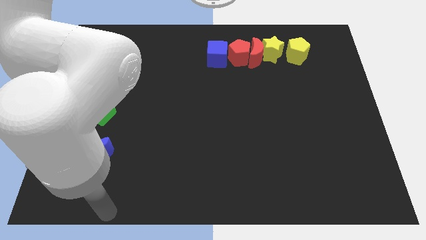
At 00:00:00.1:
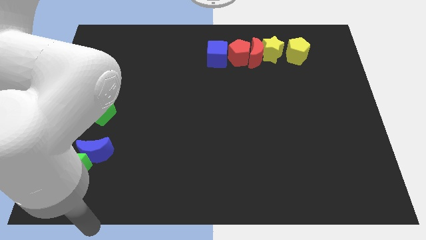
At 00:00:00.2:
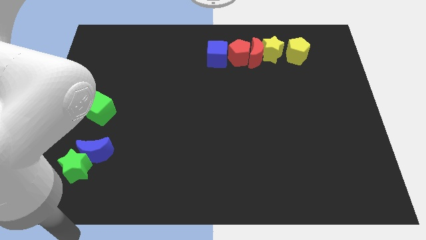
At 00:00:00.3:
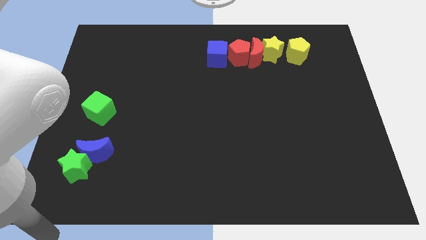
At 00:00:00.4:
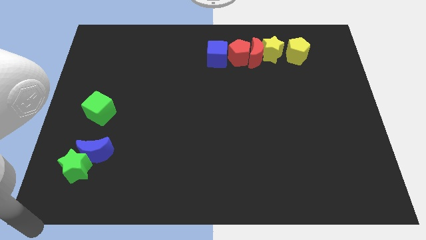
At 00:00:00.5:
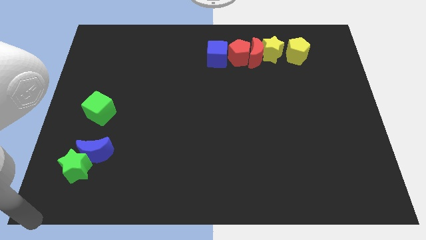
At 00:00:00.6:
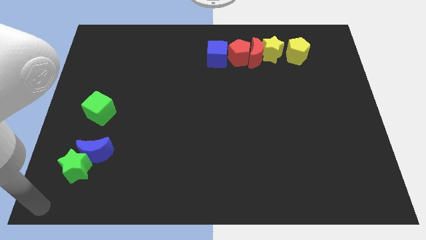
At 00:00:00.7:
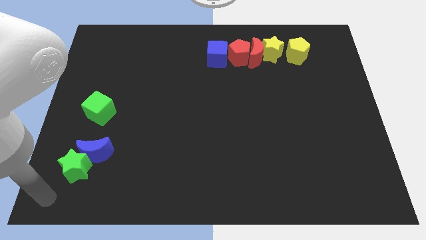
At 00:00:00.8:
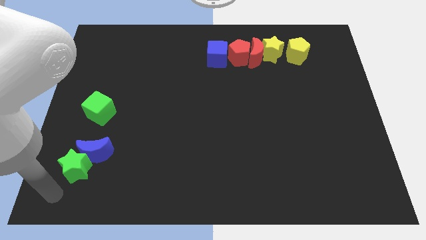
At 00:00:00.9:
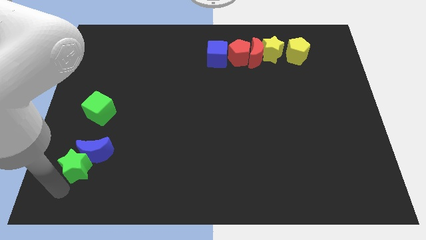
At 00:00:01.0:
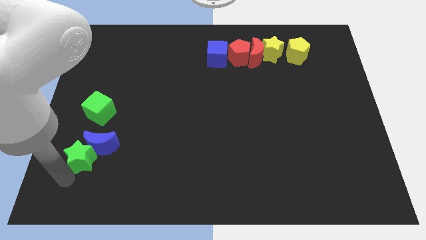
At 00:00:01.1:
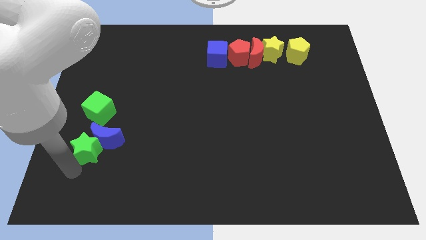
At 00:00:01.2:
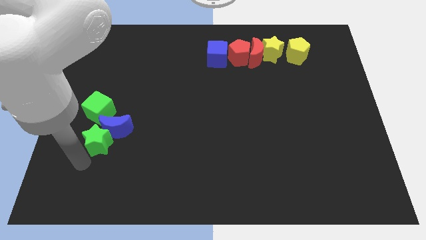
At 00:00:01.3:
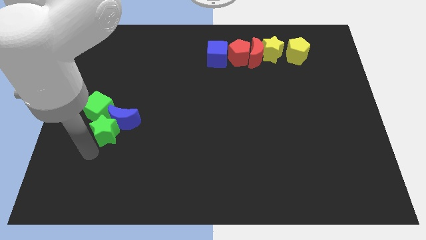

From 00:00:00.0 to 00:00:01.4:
push the green star and blue moon close to the green cube

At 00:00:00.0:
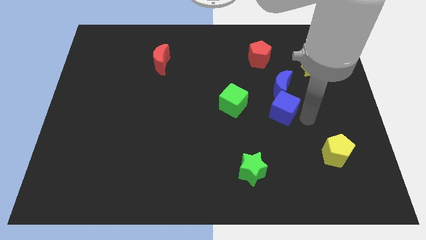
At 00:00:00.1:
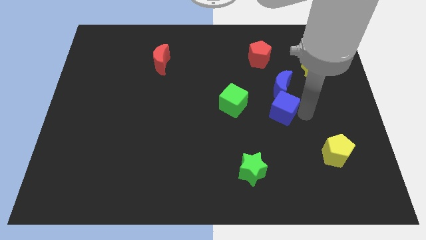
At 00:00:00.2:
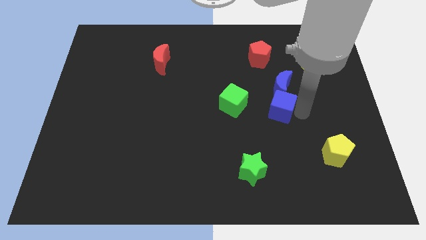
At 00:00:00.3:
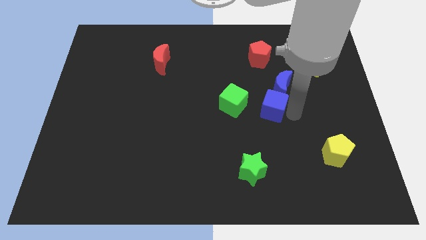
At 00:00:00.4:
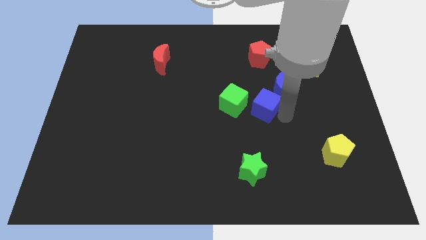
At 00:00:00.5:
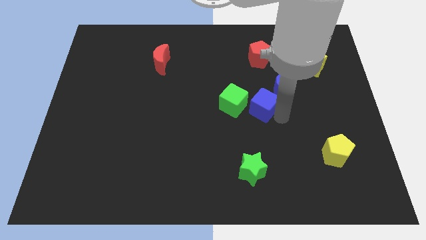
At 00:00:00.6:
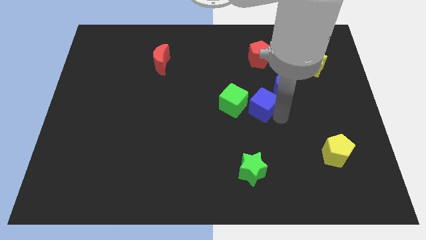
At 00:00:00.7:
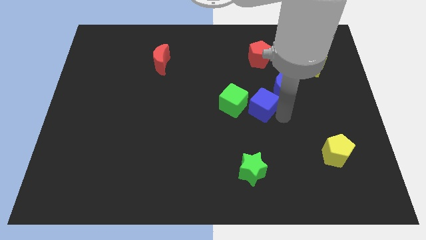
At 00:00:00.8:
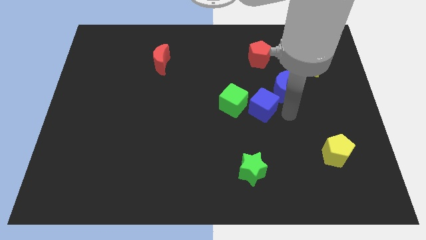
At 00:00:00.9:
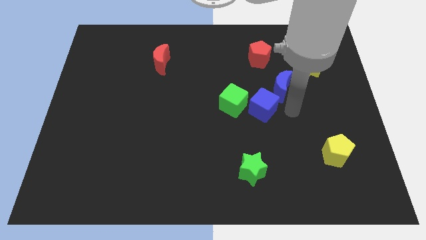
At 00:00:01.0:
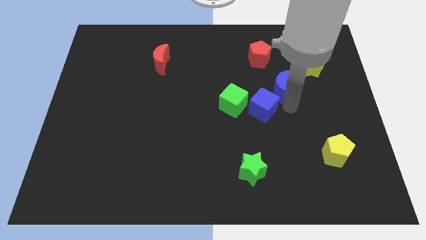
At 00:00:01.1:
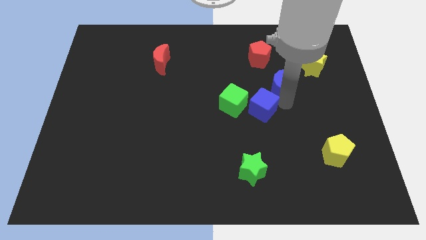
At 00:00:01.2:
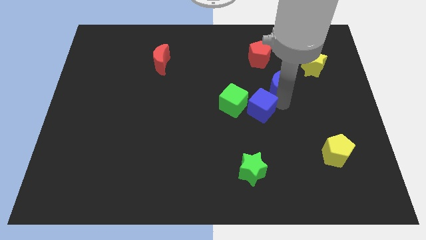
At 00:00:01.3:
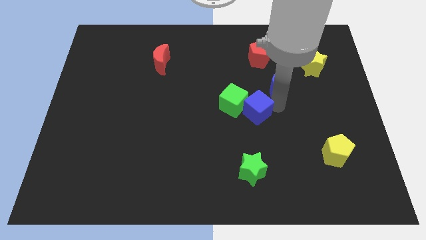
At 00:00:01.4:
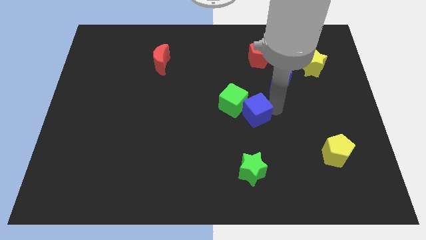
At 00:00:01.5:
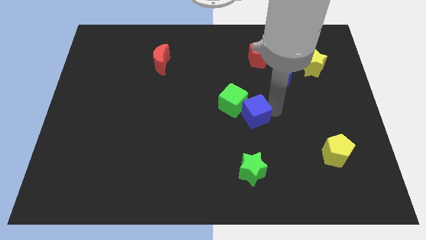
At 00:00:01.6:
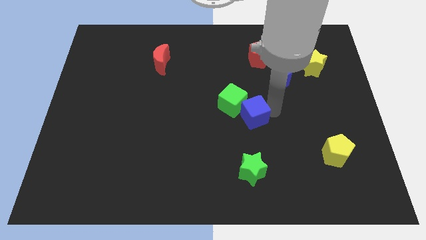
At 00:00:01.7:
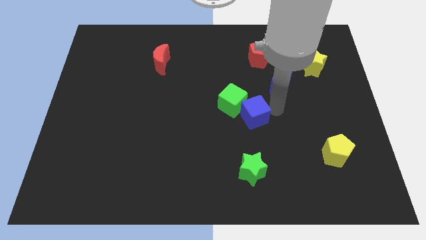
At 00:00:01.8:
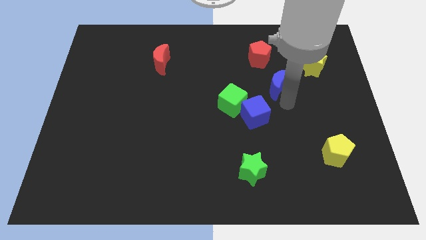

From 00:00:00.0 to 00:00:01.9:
push the blue cube into the green cube

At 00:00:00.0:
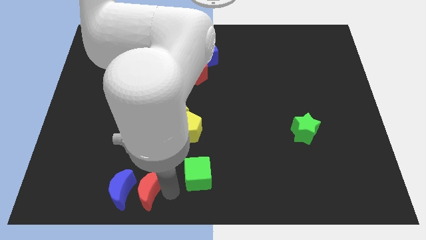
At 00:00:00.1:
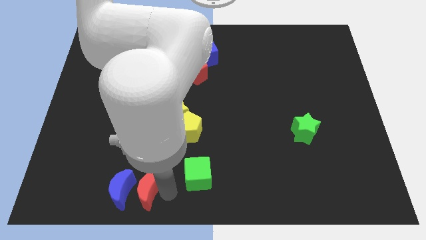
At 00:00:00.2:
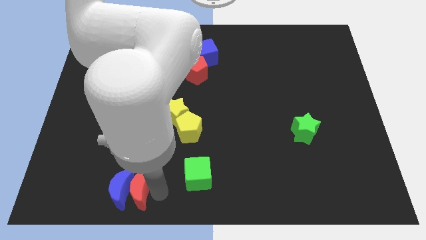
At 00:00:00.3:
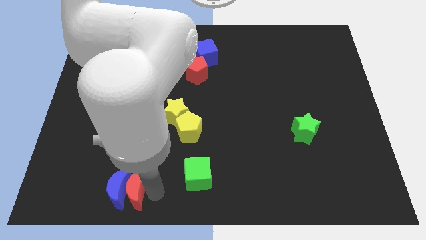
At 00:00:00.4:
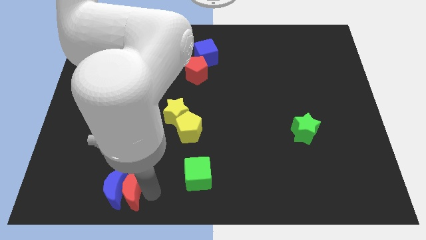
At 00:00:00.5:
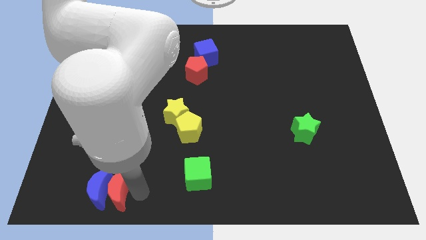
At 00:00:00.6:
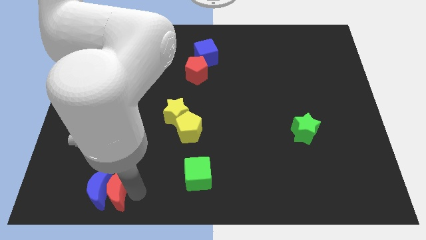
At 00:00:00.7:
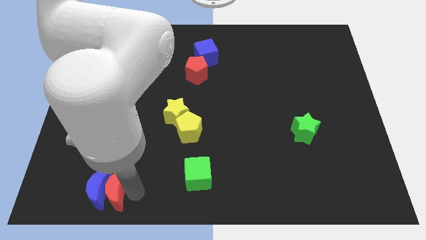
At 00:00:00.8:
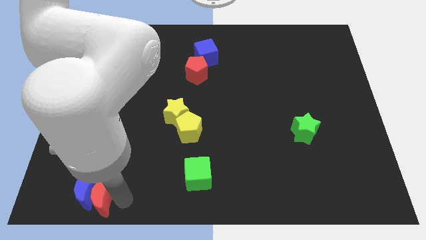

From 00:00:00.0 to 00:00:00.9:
move the red crescent slightly to the bottom along with the blue crescent

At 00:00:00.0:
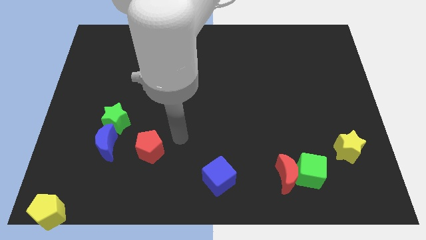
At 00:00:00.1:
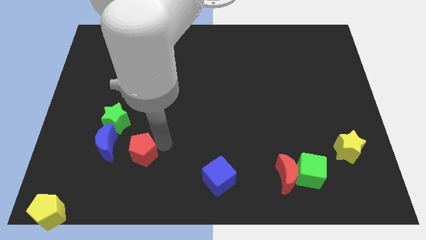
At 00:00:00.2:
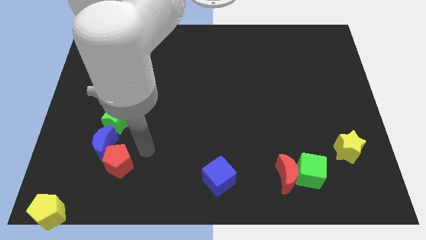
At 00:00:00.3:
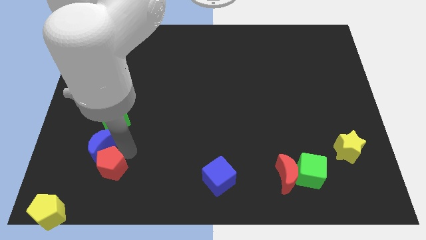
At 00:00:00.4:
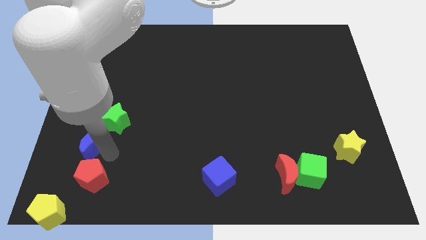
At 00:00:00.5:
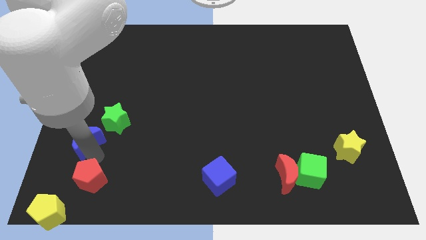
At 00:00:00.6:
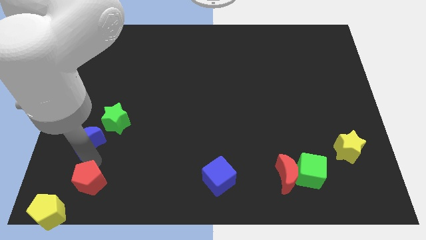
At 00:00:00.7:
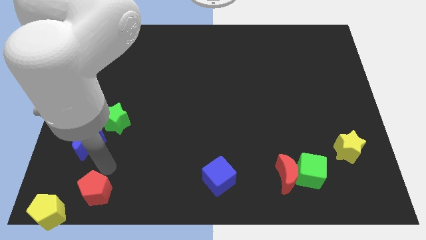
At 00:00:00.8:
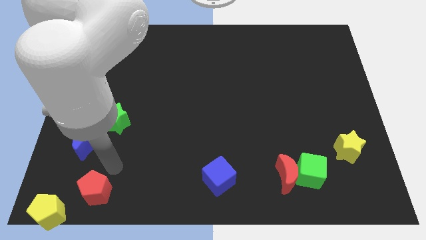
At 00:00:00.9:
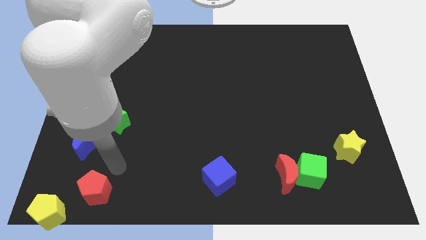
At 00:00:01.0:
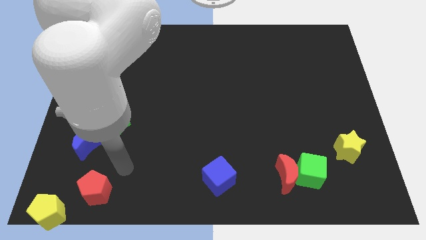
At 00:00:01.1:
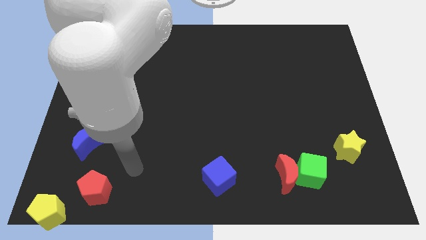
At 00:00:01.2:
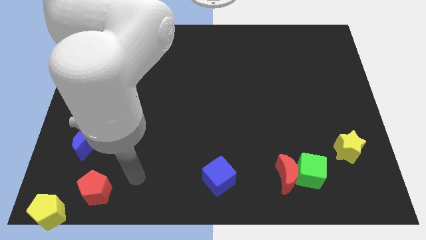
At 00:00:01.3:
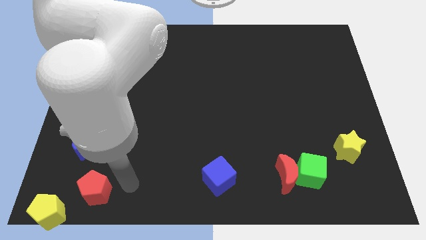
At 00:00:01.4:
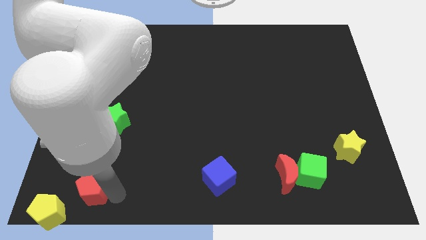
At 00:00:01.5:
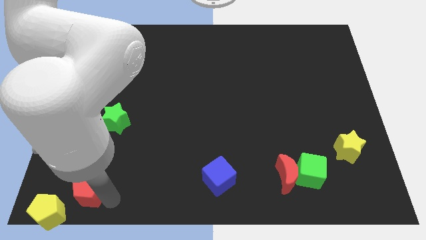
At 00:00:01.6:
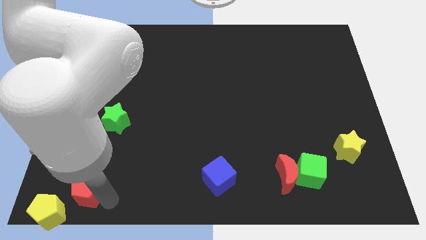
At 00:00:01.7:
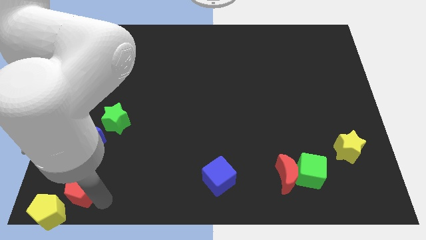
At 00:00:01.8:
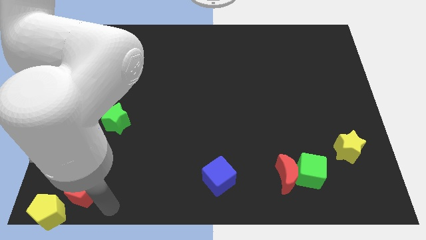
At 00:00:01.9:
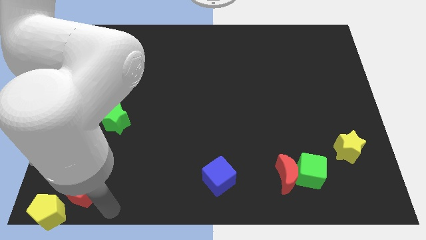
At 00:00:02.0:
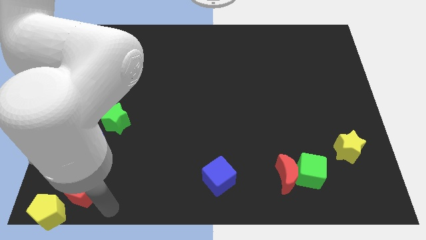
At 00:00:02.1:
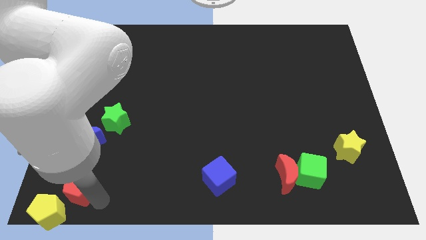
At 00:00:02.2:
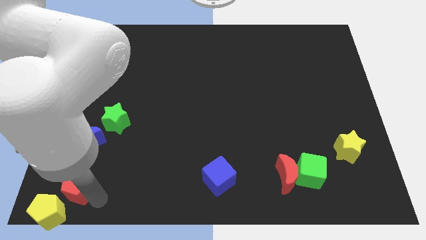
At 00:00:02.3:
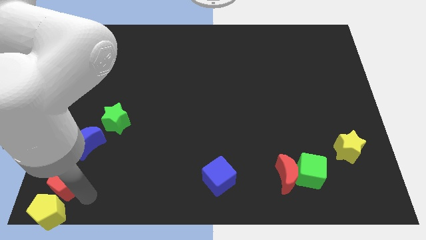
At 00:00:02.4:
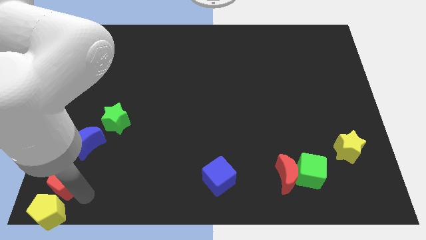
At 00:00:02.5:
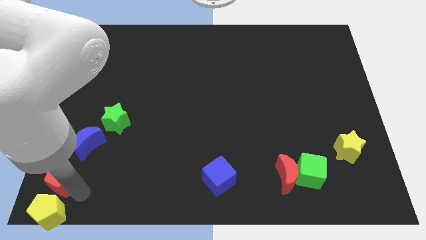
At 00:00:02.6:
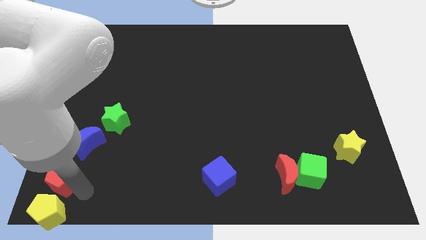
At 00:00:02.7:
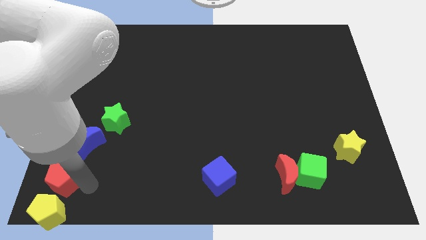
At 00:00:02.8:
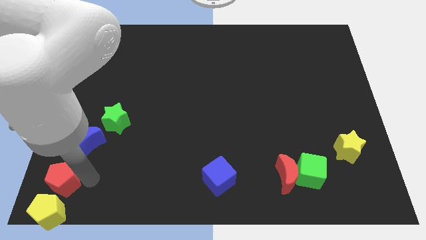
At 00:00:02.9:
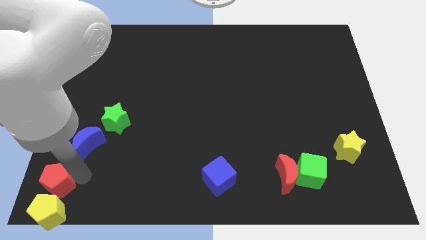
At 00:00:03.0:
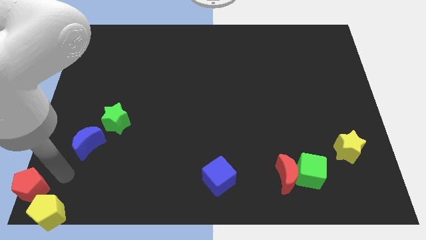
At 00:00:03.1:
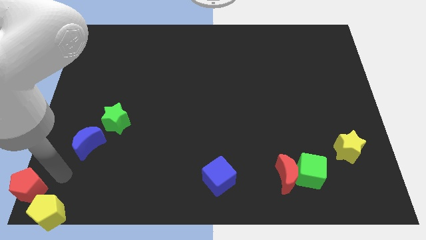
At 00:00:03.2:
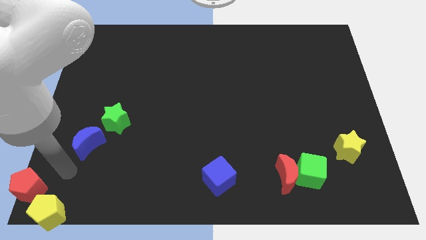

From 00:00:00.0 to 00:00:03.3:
place red pentagon to bottom left corner

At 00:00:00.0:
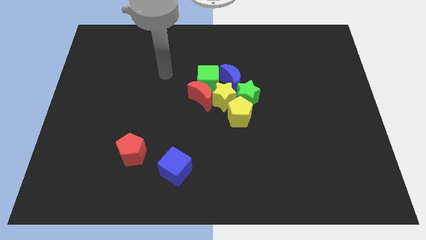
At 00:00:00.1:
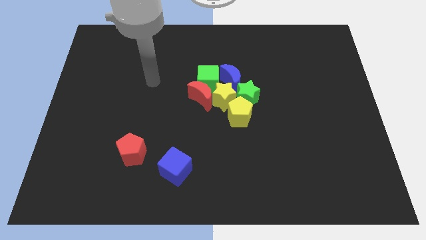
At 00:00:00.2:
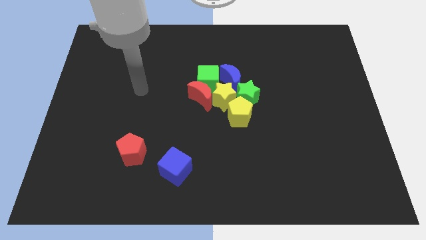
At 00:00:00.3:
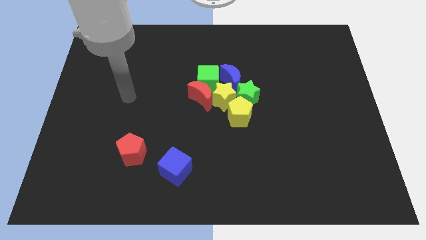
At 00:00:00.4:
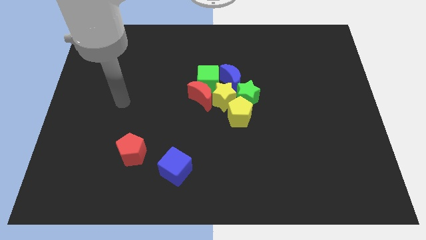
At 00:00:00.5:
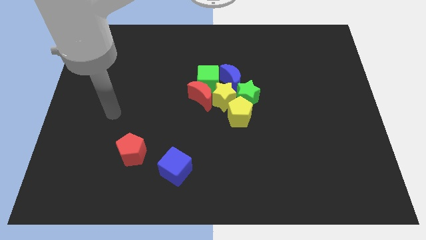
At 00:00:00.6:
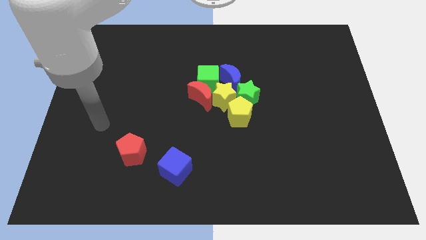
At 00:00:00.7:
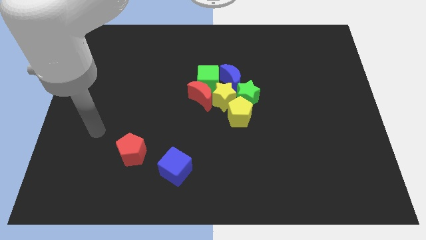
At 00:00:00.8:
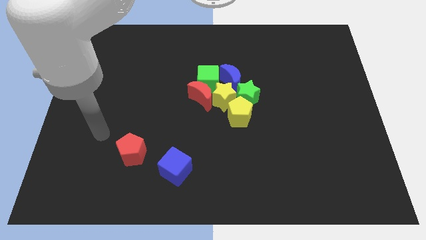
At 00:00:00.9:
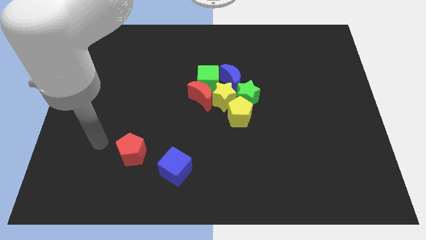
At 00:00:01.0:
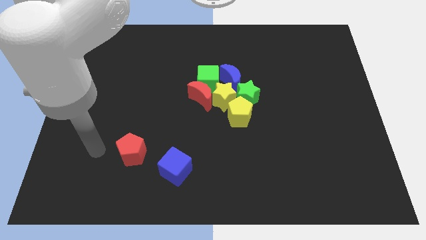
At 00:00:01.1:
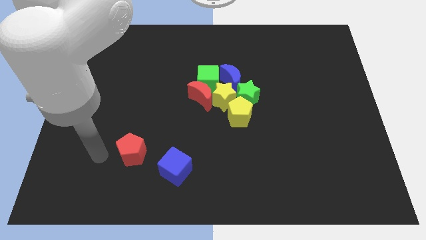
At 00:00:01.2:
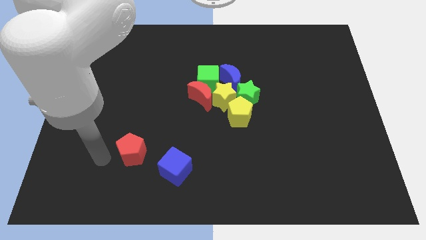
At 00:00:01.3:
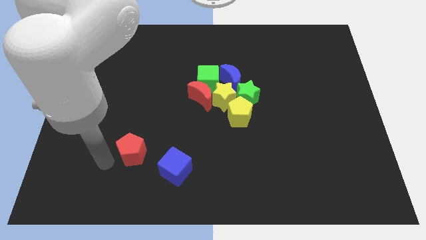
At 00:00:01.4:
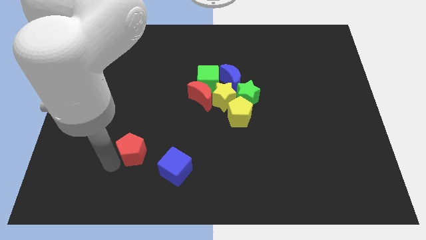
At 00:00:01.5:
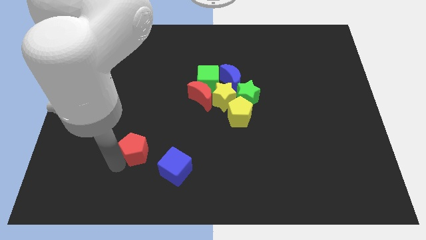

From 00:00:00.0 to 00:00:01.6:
move your arm to the left side of the red pentagon
